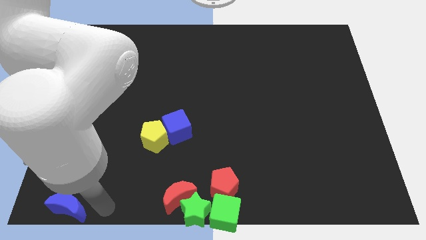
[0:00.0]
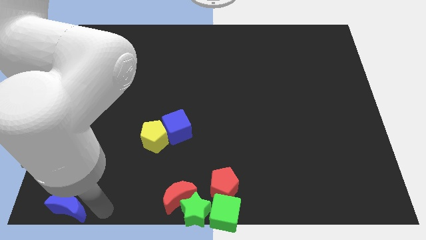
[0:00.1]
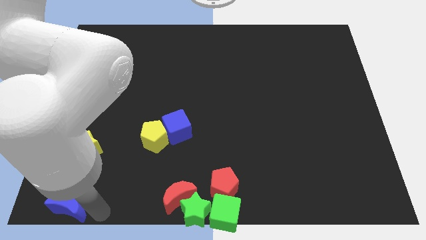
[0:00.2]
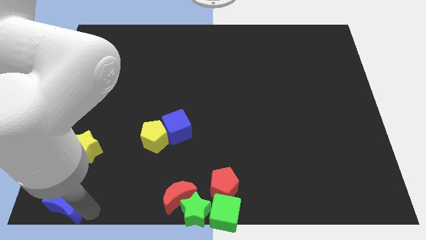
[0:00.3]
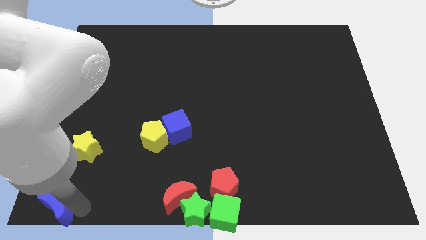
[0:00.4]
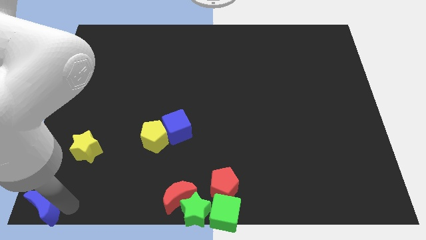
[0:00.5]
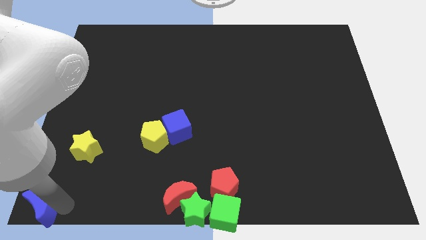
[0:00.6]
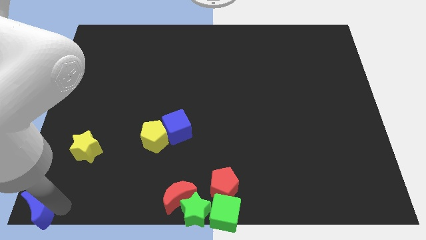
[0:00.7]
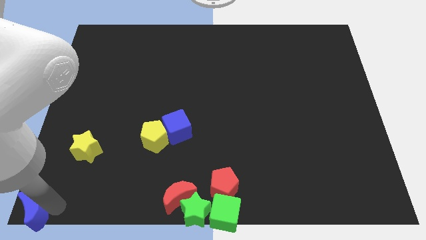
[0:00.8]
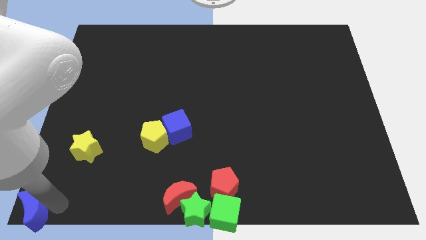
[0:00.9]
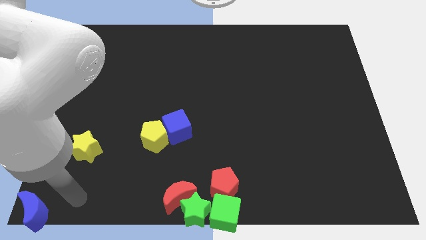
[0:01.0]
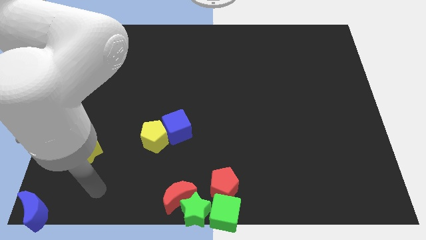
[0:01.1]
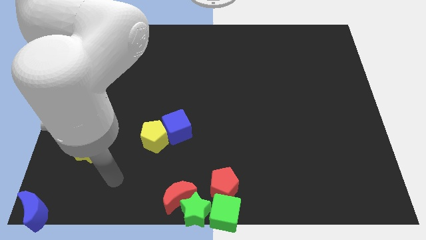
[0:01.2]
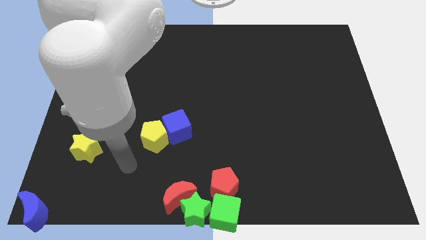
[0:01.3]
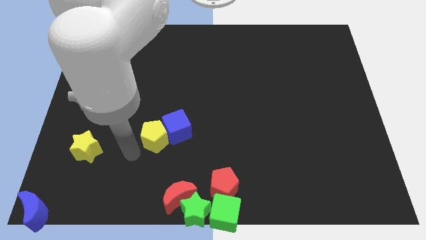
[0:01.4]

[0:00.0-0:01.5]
move the blue moon to the bottom left corner of the board

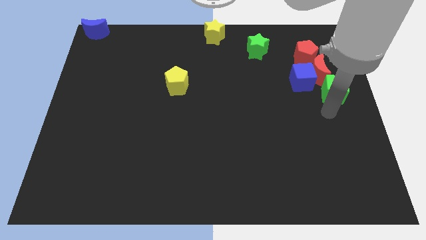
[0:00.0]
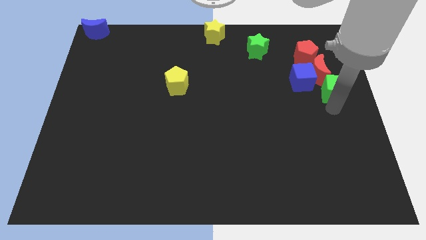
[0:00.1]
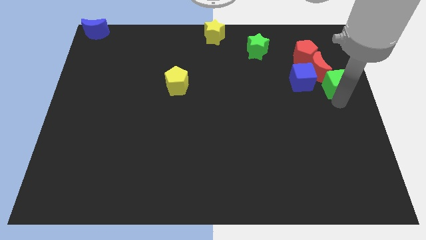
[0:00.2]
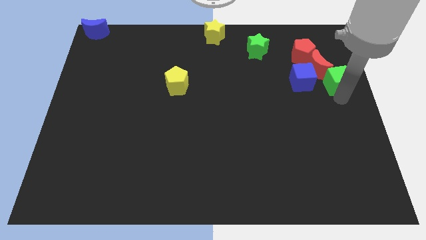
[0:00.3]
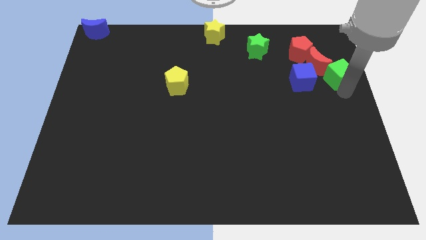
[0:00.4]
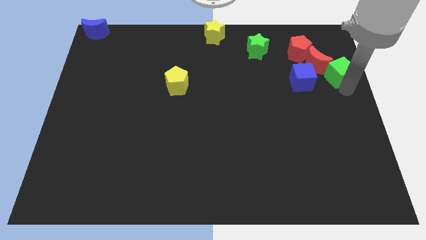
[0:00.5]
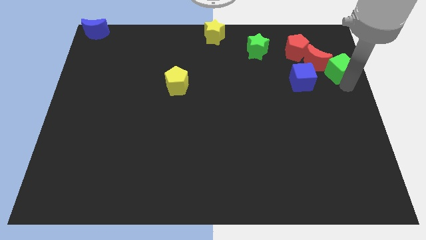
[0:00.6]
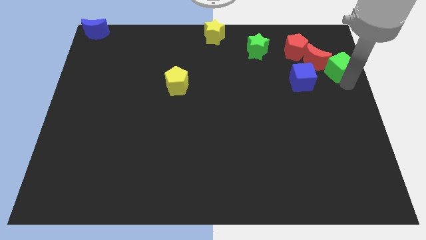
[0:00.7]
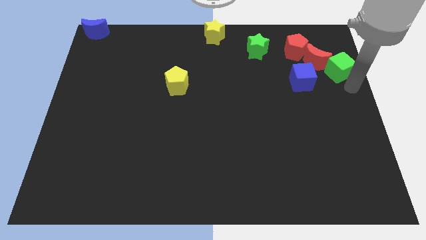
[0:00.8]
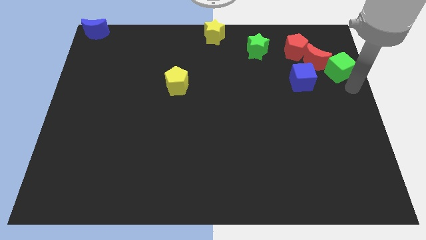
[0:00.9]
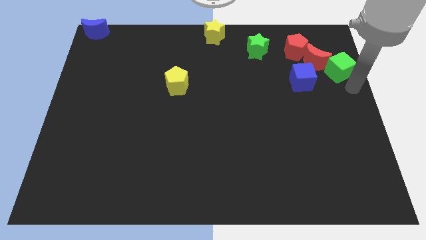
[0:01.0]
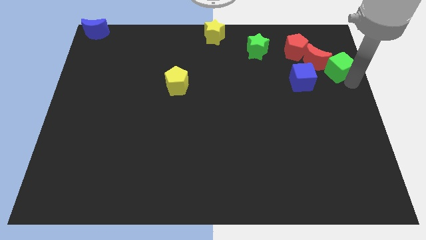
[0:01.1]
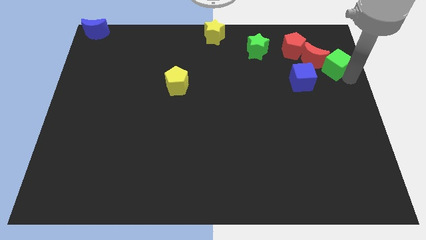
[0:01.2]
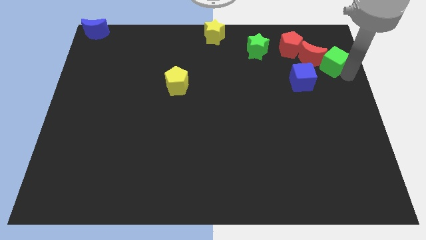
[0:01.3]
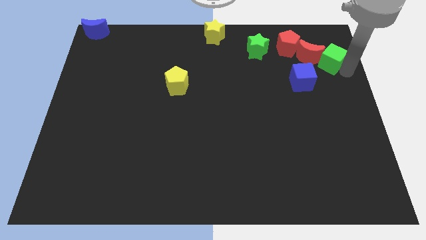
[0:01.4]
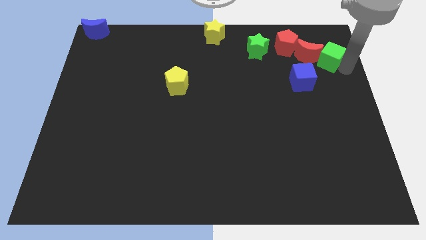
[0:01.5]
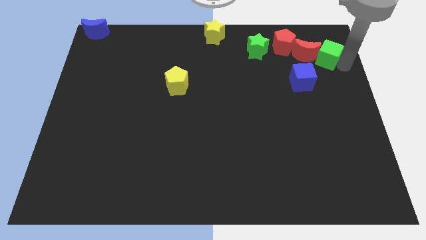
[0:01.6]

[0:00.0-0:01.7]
move the green cube to the right of the red crescent

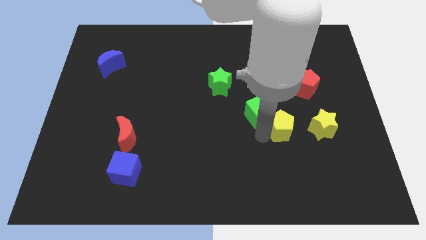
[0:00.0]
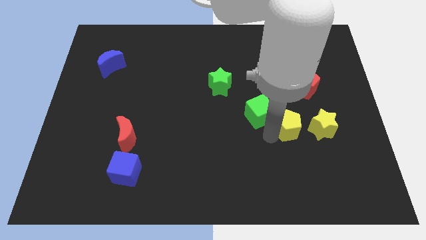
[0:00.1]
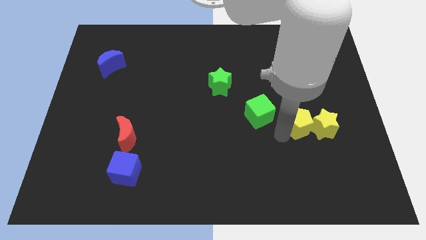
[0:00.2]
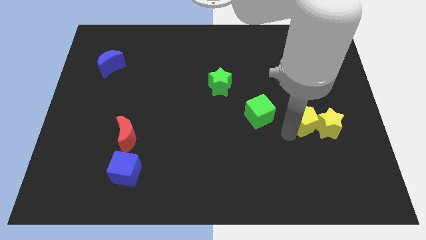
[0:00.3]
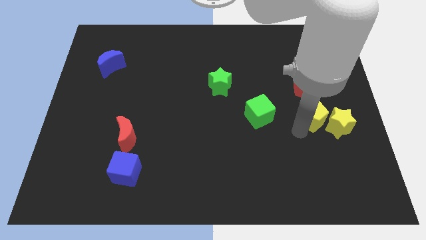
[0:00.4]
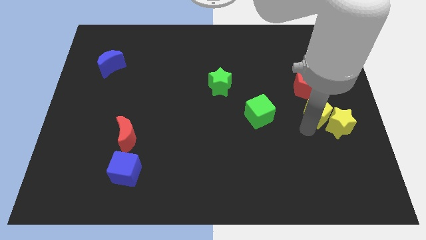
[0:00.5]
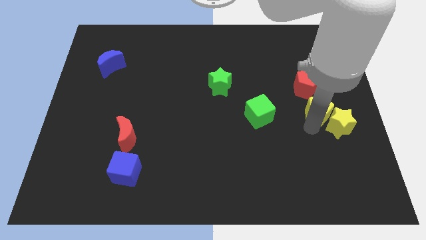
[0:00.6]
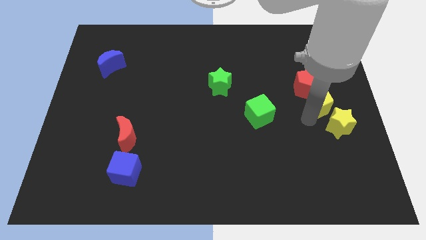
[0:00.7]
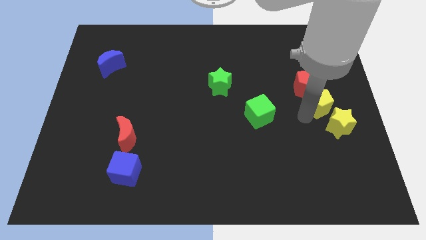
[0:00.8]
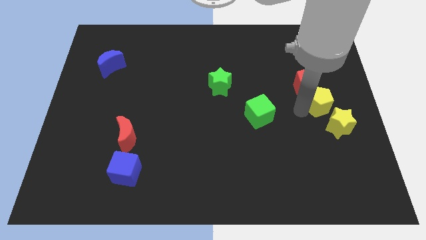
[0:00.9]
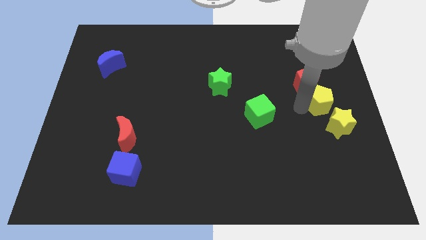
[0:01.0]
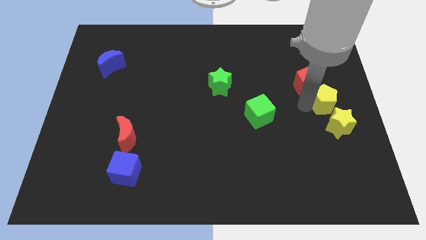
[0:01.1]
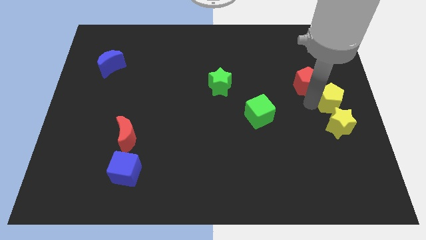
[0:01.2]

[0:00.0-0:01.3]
place the yellow pentagon in between the red pentagon and the yellow star

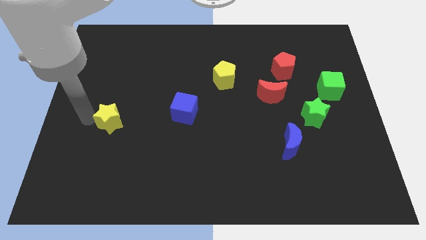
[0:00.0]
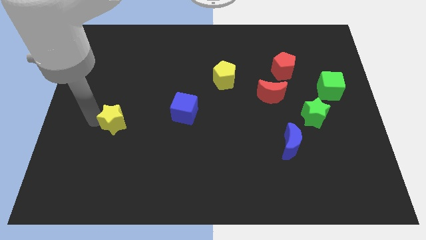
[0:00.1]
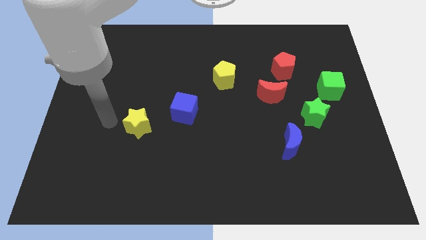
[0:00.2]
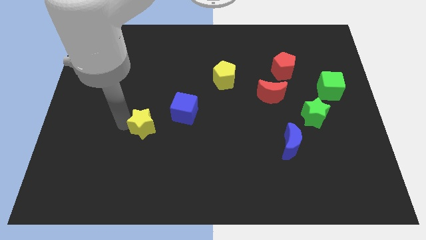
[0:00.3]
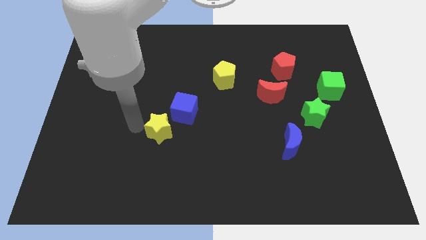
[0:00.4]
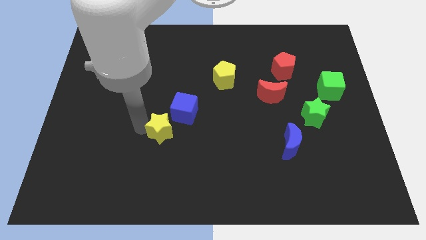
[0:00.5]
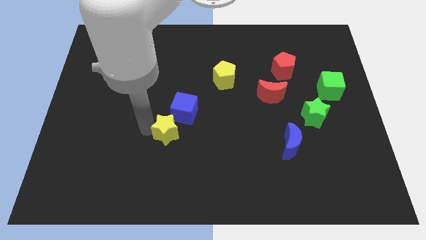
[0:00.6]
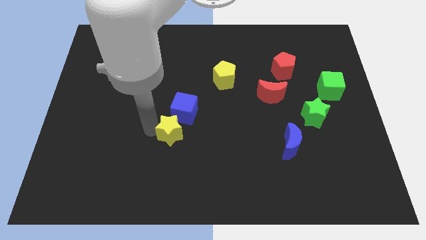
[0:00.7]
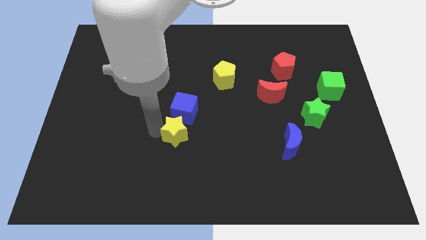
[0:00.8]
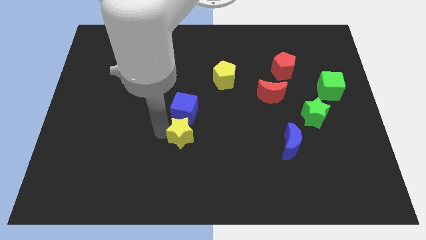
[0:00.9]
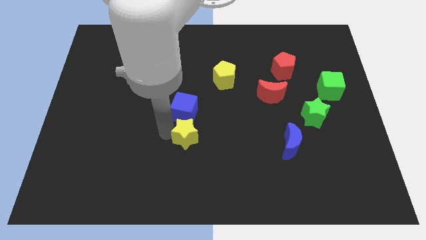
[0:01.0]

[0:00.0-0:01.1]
place the yellow star below the blue cube

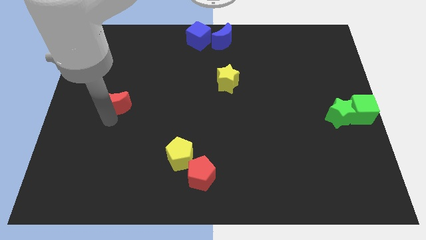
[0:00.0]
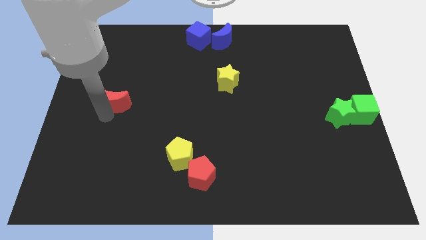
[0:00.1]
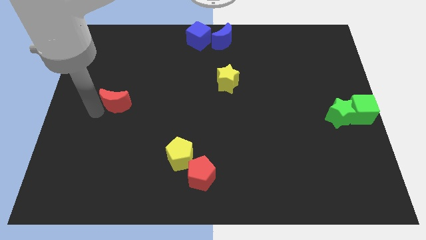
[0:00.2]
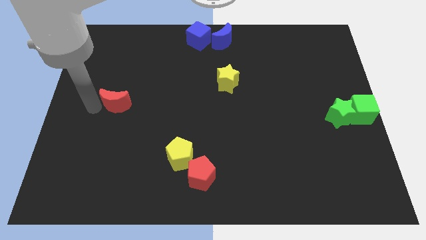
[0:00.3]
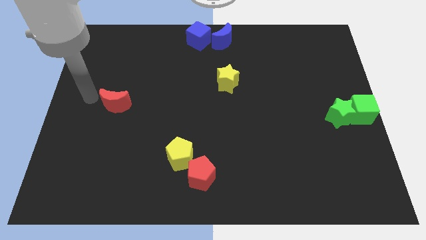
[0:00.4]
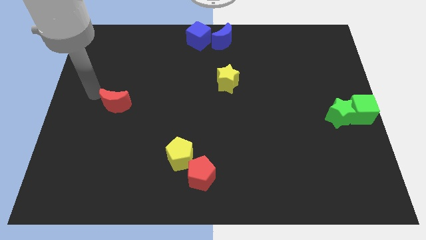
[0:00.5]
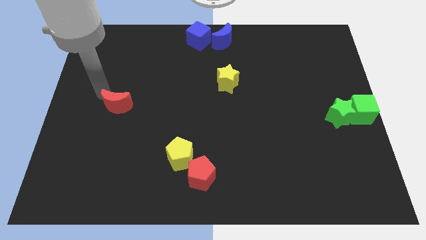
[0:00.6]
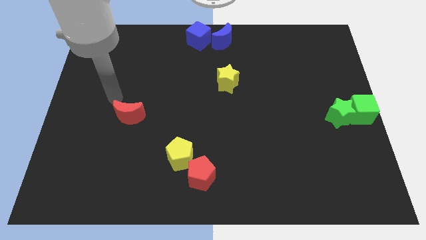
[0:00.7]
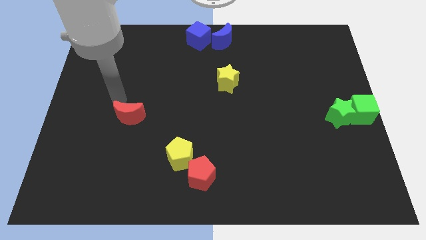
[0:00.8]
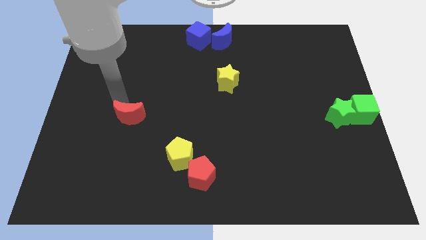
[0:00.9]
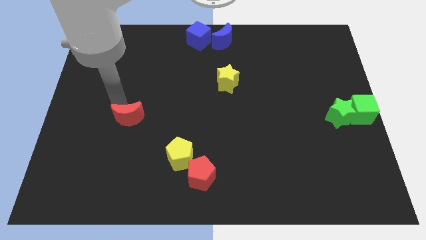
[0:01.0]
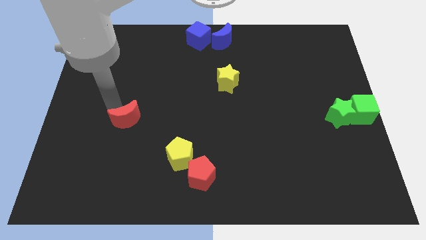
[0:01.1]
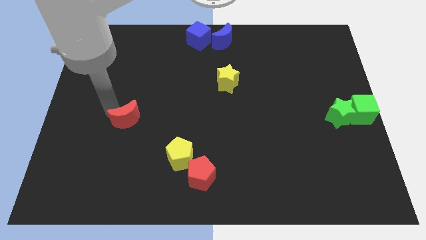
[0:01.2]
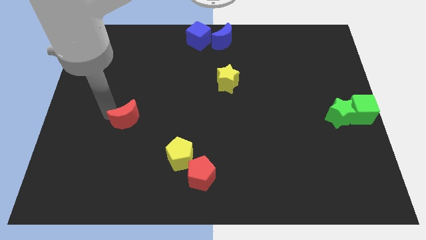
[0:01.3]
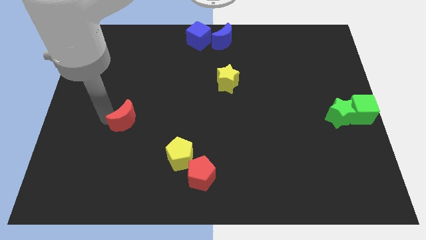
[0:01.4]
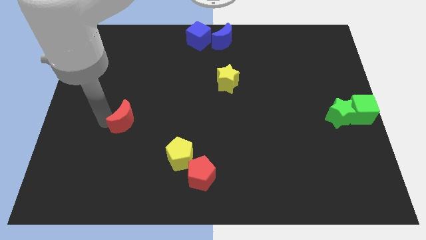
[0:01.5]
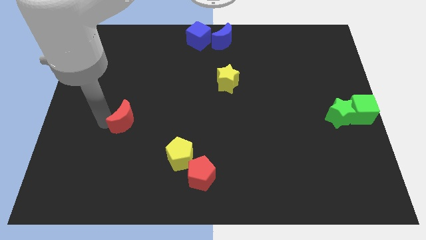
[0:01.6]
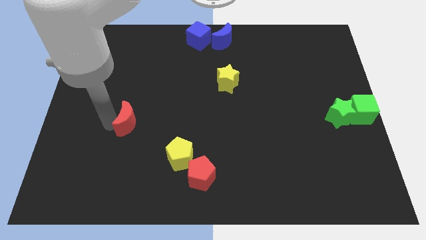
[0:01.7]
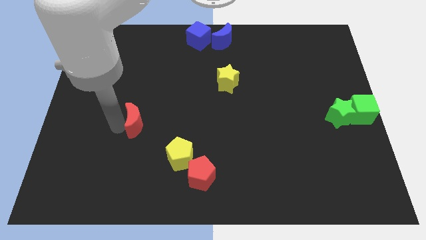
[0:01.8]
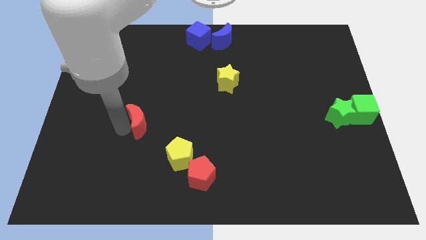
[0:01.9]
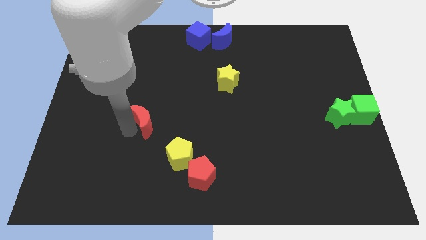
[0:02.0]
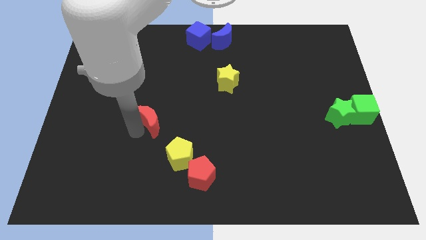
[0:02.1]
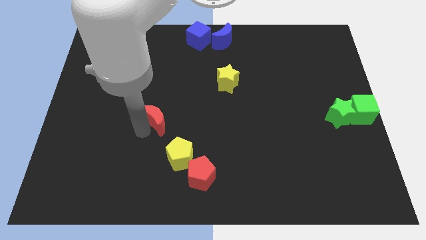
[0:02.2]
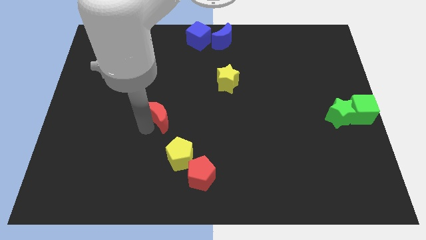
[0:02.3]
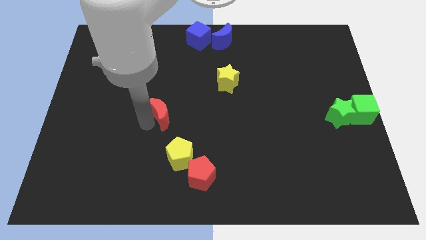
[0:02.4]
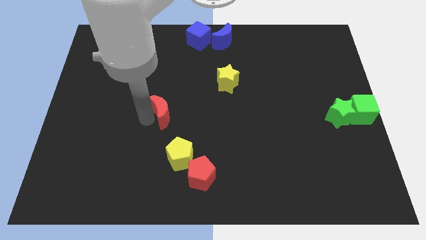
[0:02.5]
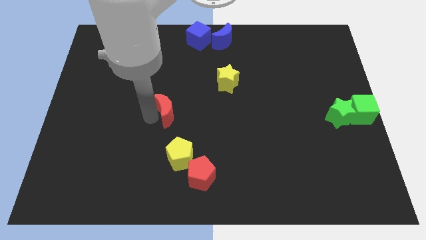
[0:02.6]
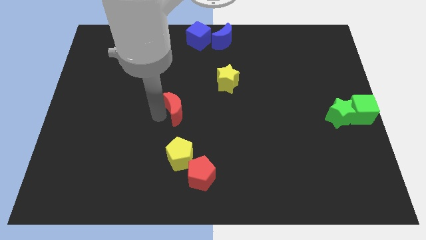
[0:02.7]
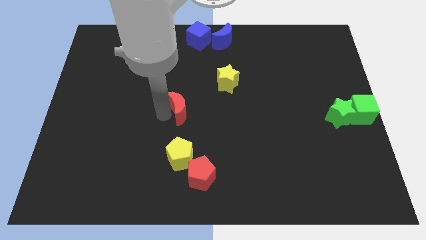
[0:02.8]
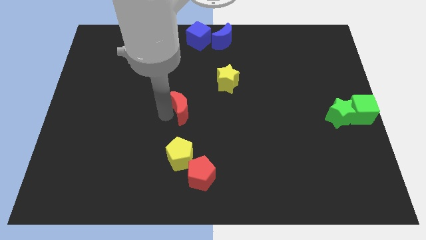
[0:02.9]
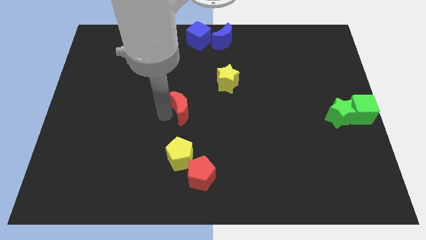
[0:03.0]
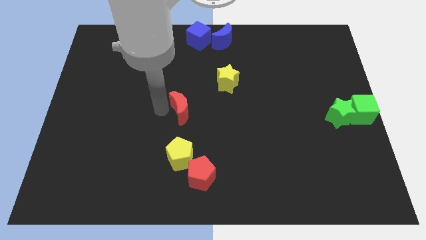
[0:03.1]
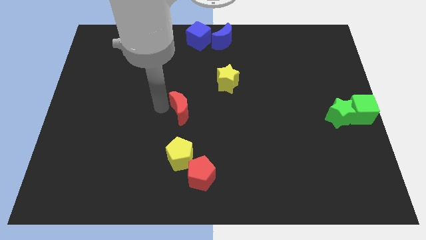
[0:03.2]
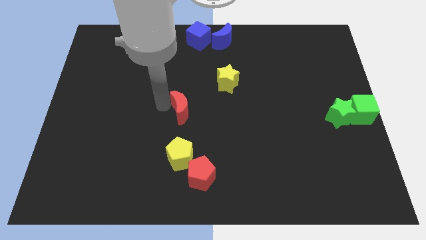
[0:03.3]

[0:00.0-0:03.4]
move the red crescent above the yellow pentagon
